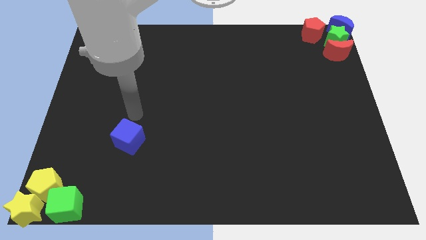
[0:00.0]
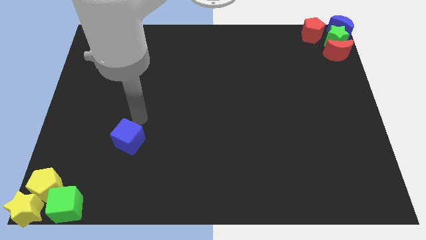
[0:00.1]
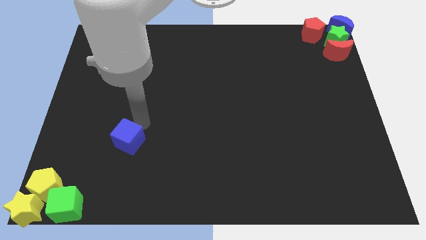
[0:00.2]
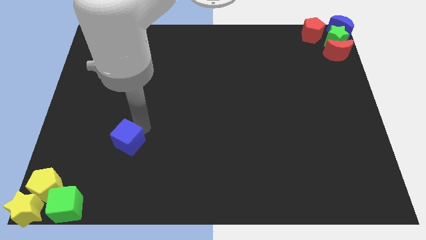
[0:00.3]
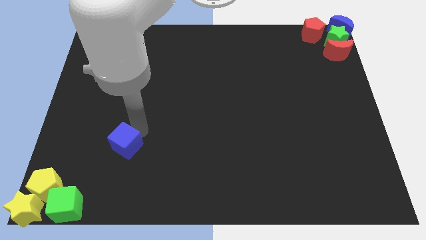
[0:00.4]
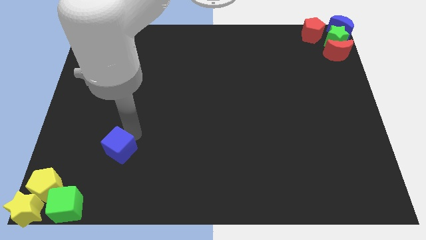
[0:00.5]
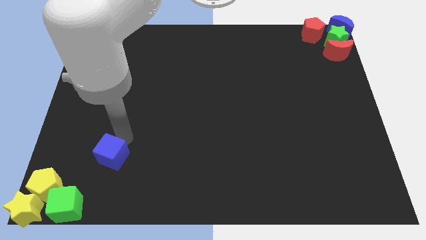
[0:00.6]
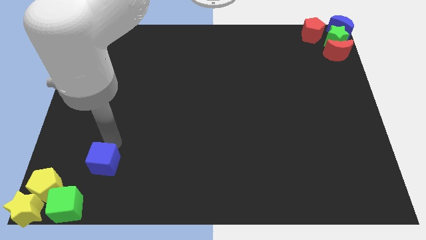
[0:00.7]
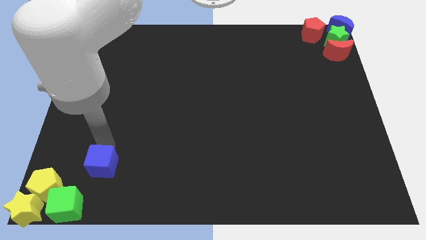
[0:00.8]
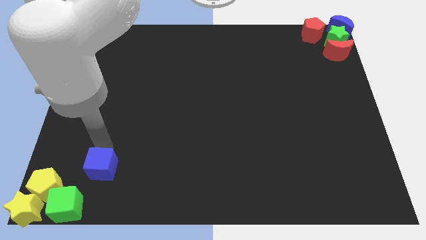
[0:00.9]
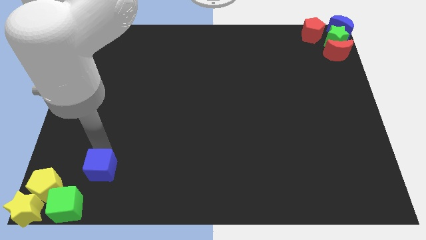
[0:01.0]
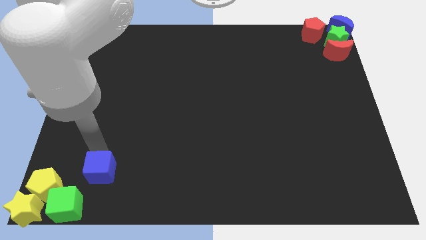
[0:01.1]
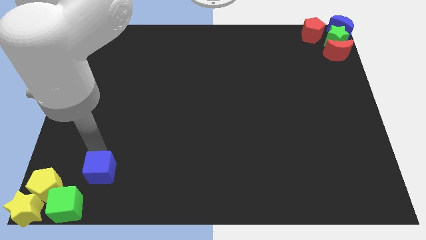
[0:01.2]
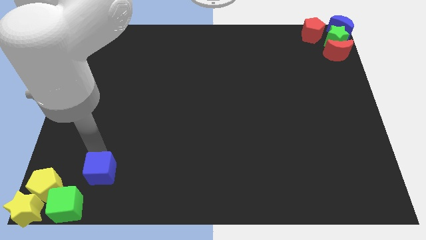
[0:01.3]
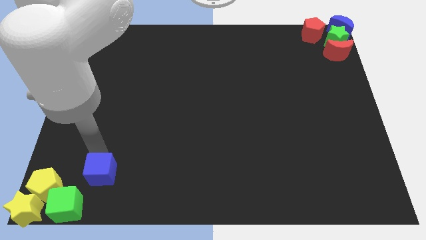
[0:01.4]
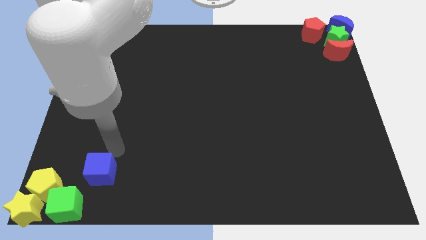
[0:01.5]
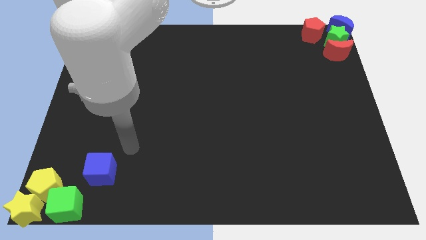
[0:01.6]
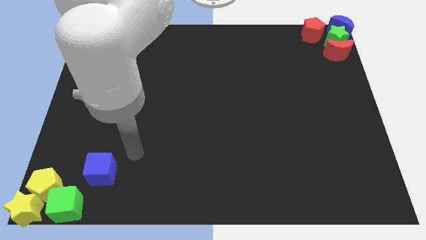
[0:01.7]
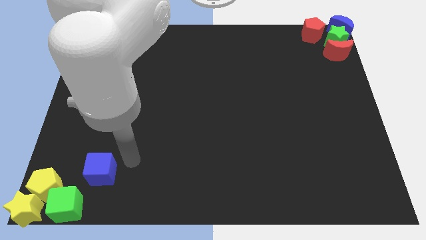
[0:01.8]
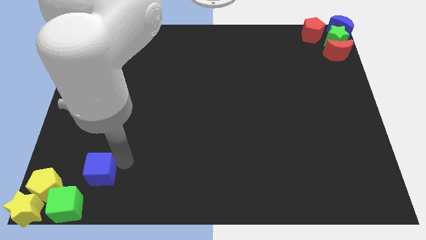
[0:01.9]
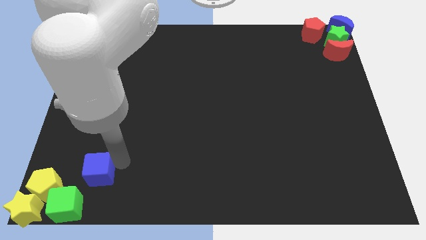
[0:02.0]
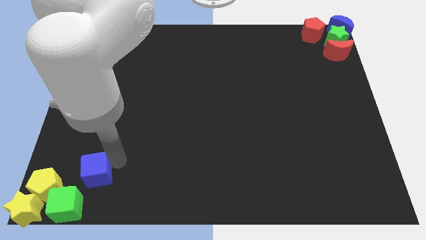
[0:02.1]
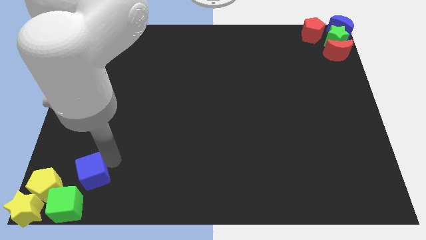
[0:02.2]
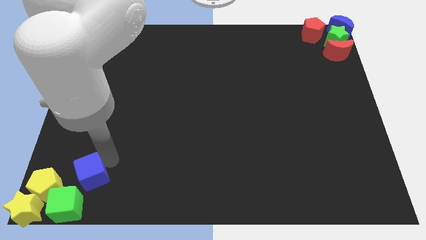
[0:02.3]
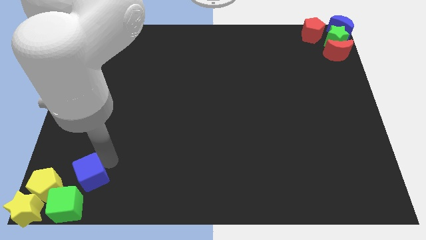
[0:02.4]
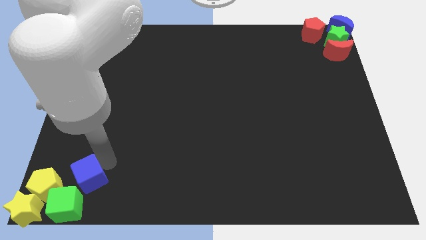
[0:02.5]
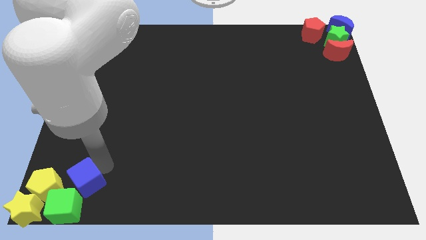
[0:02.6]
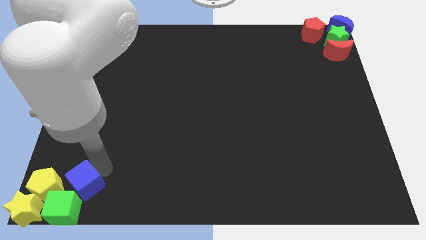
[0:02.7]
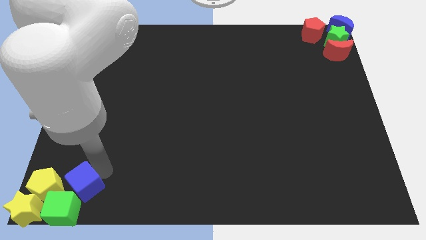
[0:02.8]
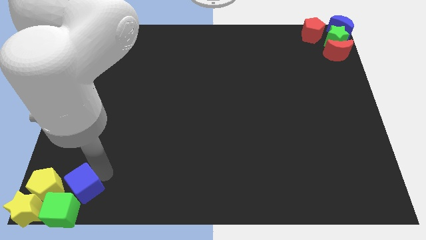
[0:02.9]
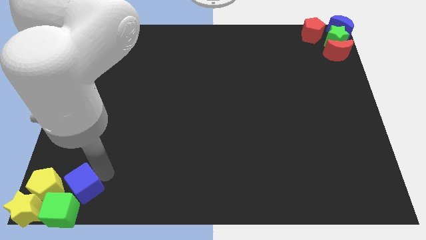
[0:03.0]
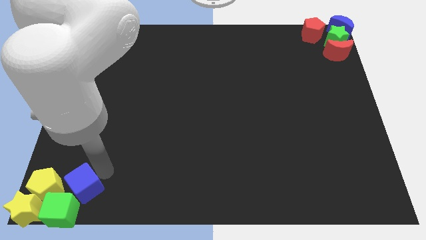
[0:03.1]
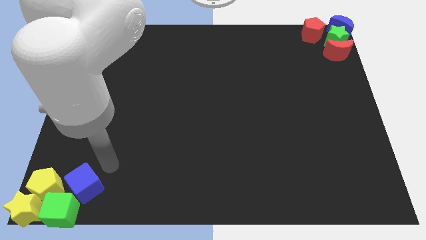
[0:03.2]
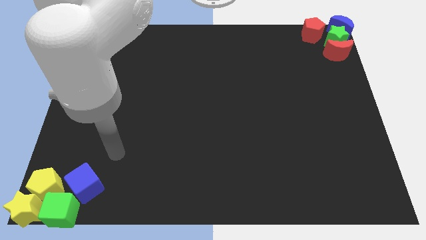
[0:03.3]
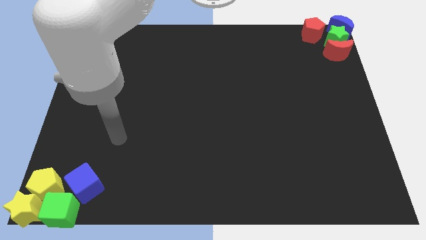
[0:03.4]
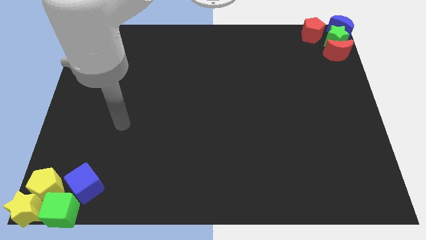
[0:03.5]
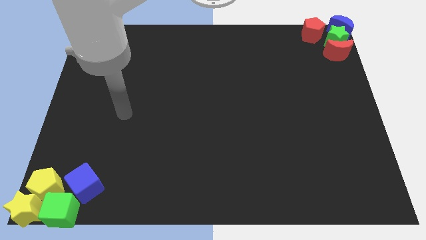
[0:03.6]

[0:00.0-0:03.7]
push the blue cube into the green cube

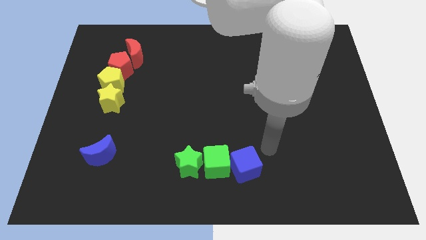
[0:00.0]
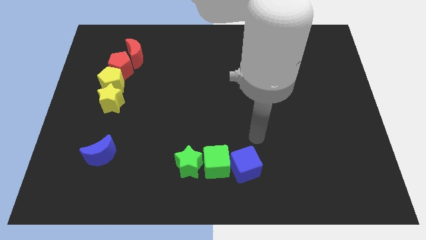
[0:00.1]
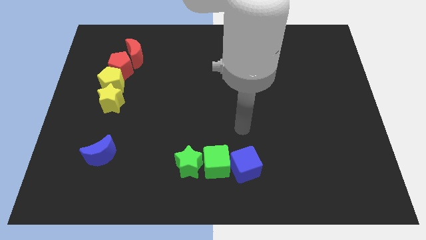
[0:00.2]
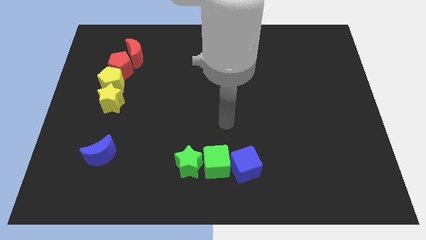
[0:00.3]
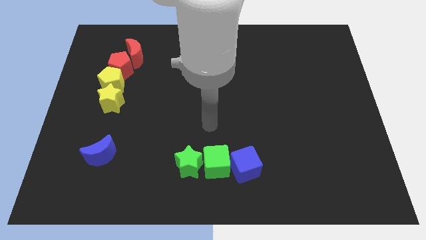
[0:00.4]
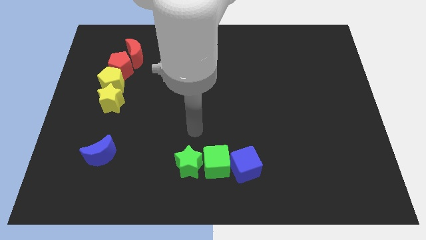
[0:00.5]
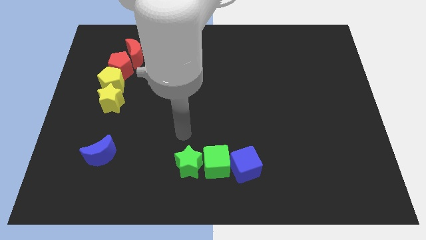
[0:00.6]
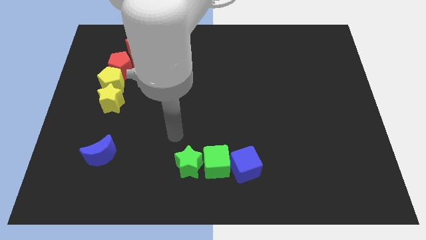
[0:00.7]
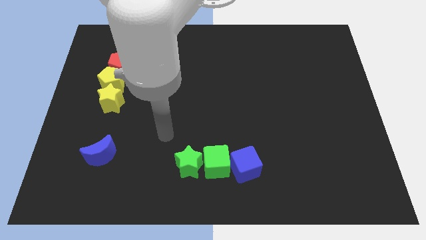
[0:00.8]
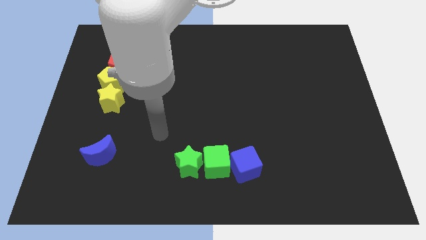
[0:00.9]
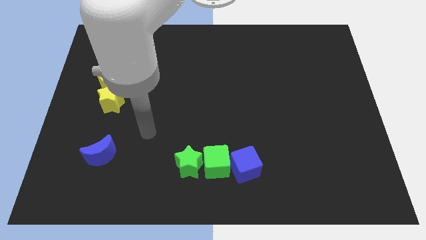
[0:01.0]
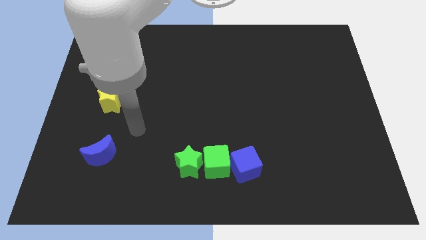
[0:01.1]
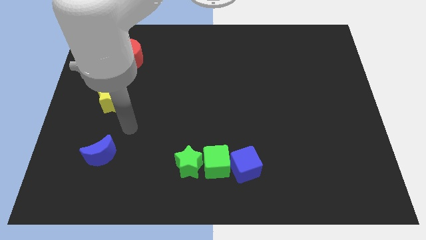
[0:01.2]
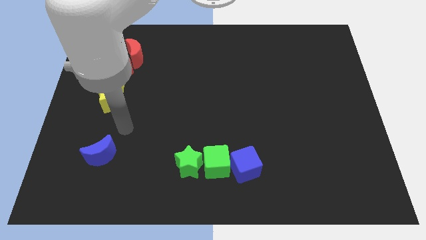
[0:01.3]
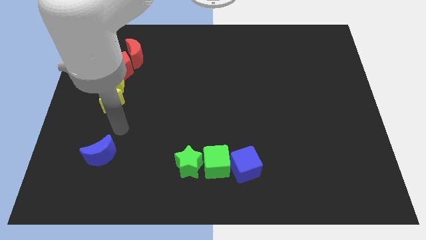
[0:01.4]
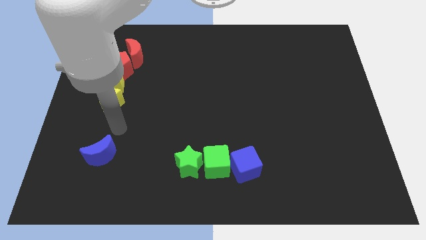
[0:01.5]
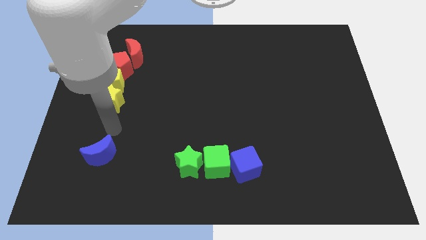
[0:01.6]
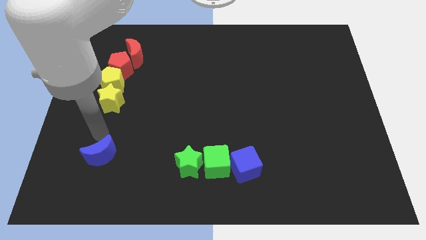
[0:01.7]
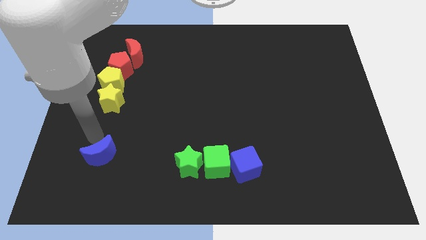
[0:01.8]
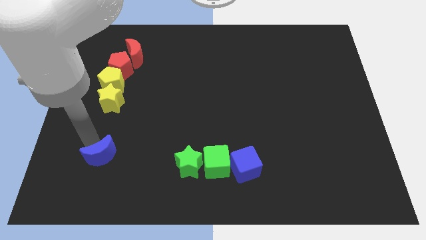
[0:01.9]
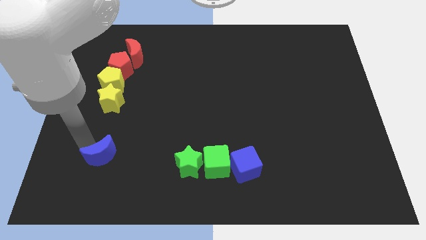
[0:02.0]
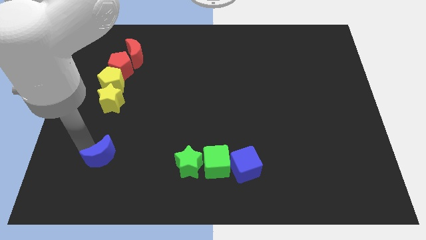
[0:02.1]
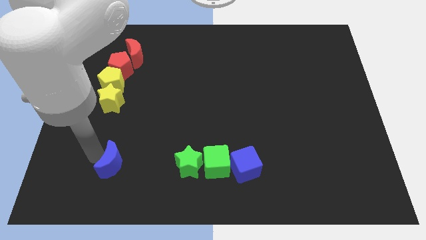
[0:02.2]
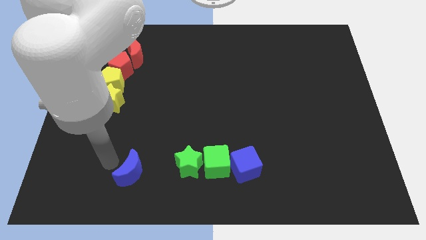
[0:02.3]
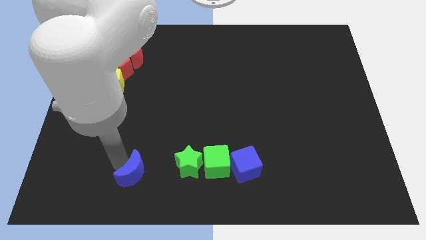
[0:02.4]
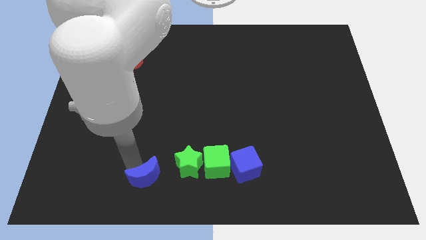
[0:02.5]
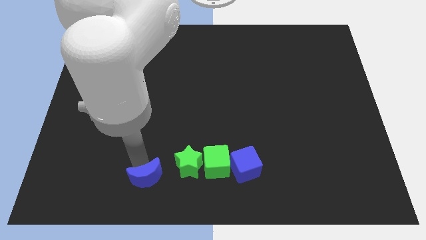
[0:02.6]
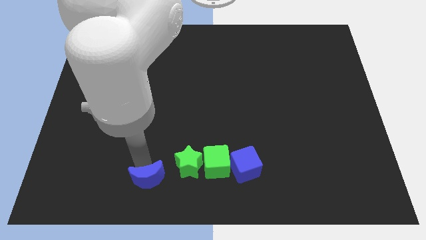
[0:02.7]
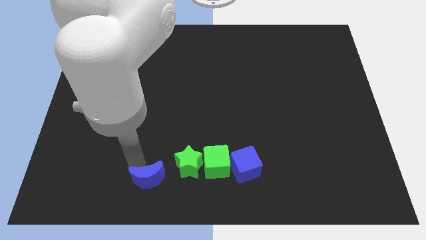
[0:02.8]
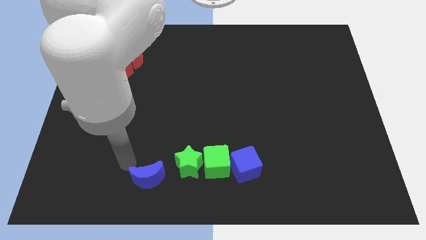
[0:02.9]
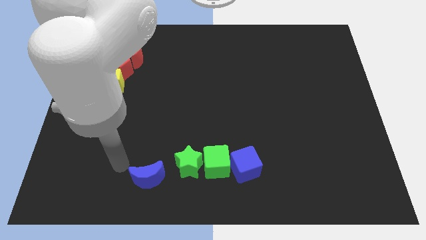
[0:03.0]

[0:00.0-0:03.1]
place the blue moon left to the green star

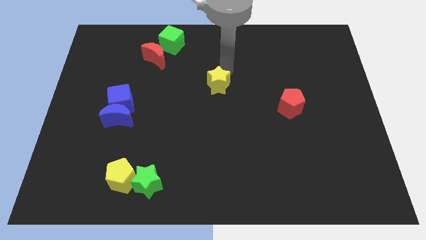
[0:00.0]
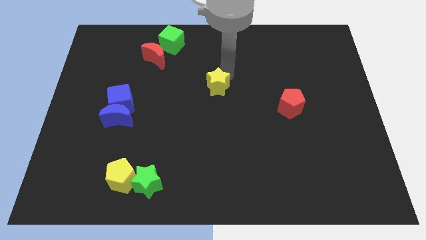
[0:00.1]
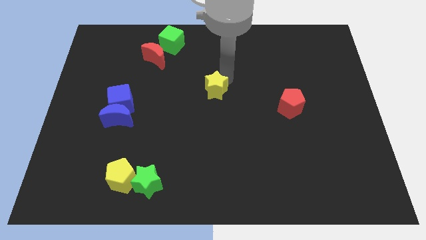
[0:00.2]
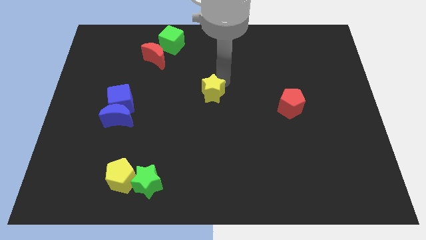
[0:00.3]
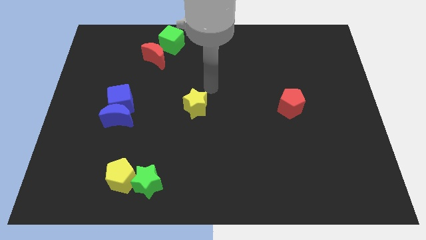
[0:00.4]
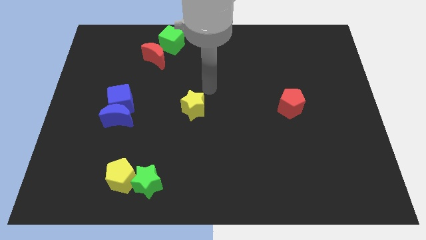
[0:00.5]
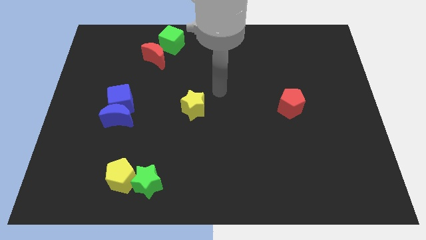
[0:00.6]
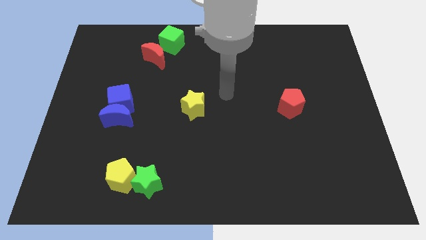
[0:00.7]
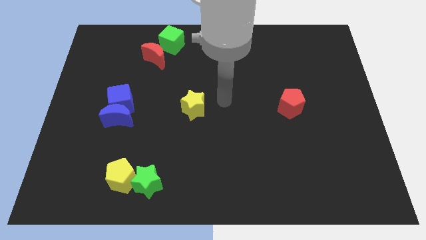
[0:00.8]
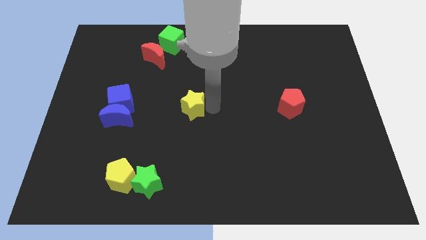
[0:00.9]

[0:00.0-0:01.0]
move the yellow star to the center

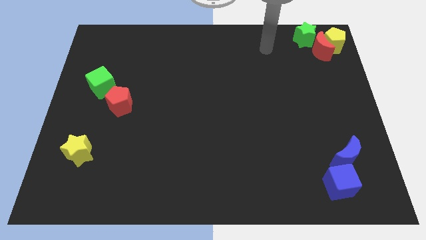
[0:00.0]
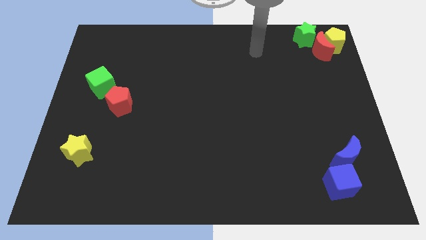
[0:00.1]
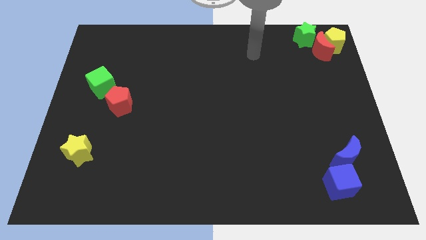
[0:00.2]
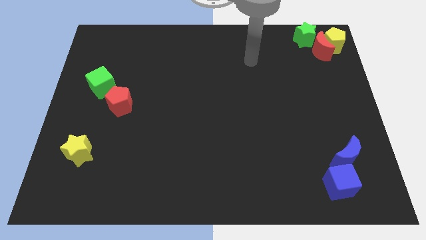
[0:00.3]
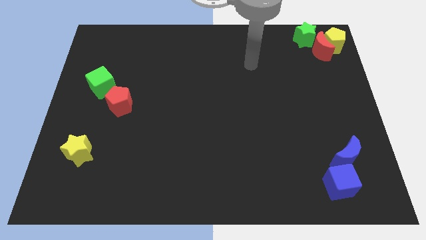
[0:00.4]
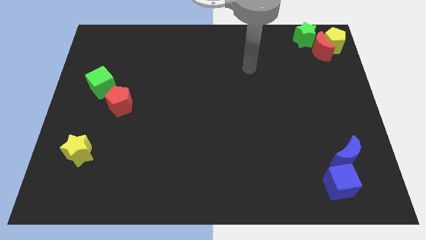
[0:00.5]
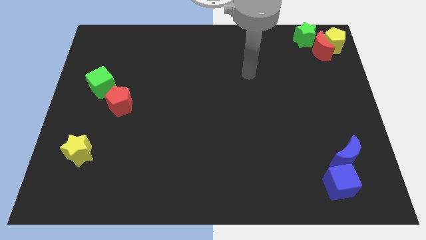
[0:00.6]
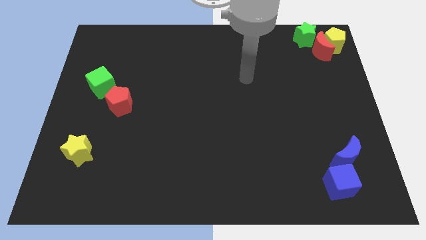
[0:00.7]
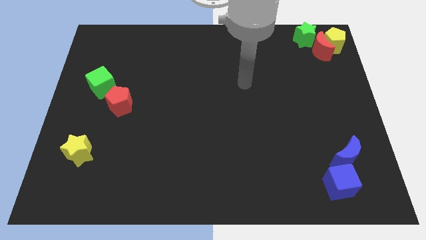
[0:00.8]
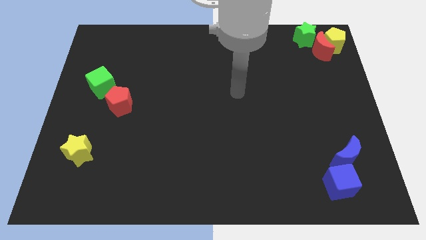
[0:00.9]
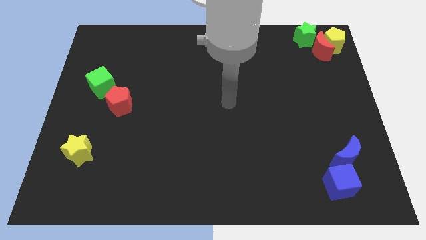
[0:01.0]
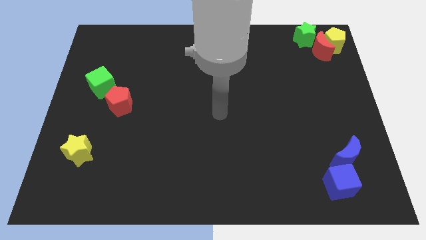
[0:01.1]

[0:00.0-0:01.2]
place your hand at center of the board
